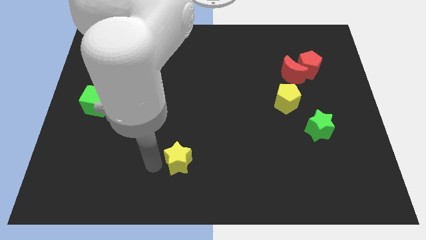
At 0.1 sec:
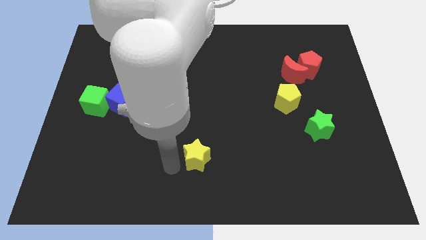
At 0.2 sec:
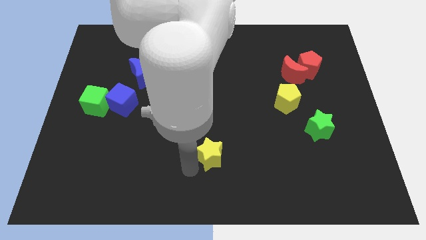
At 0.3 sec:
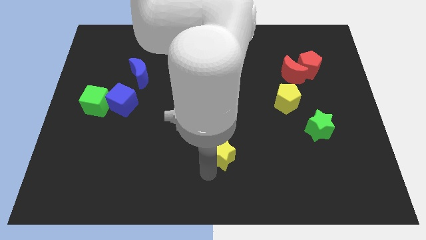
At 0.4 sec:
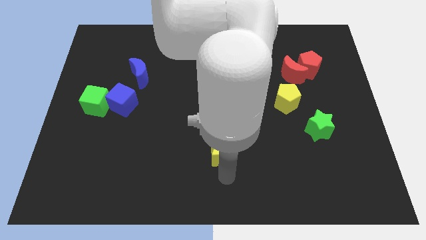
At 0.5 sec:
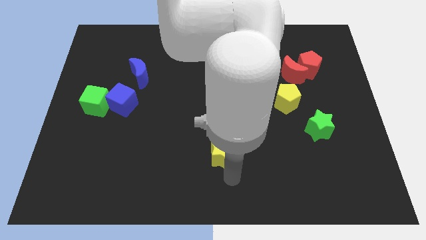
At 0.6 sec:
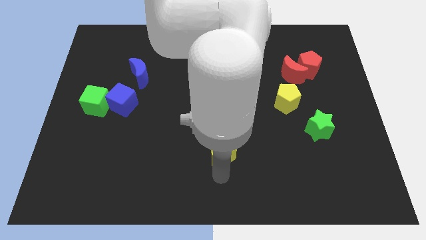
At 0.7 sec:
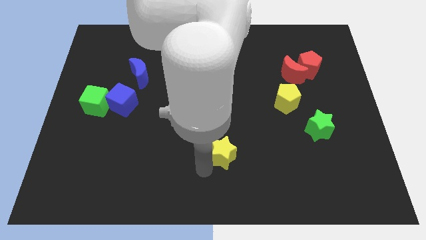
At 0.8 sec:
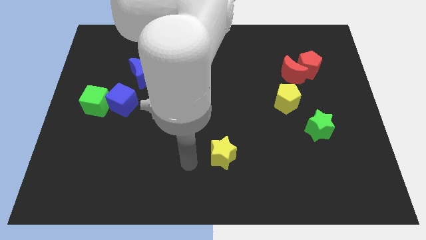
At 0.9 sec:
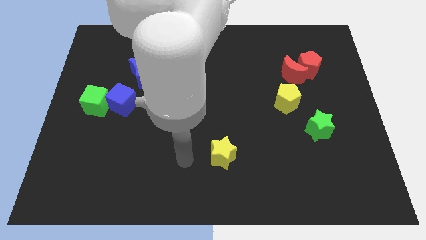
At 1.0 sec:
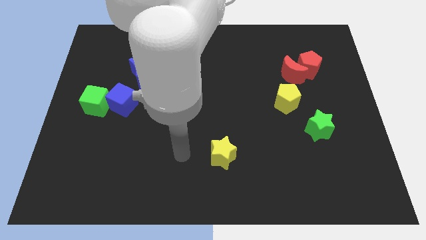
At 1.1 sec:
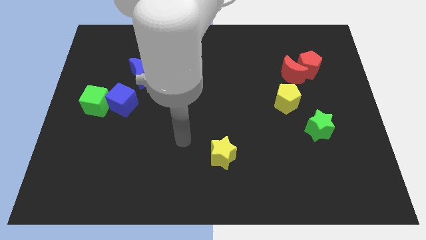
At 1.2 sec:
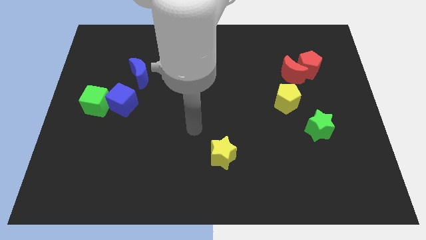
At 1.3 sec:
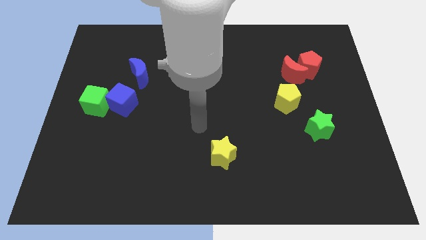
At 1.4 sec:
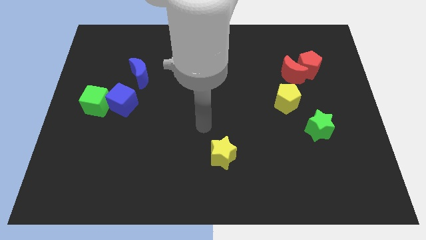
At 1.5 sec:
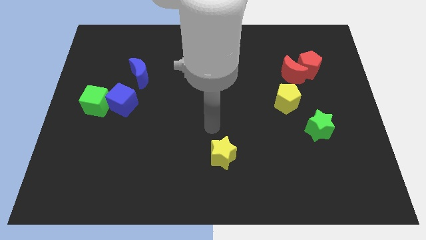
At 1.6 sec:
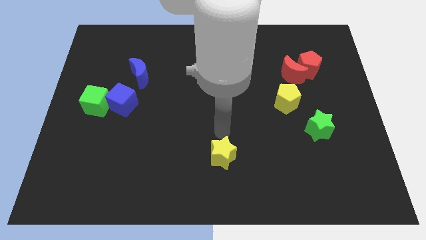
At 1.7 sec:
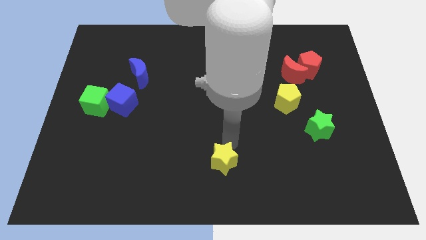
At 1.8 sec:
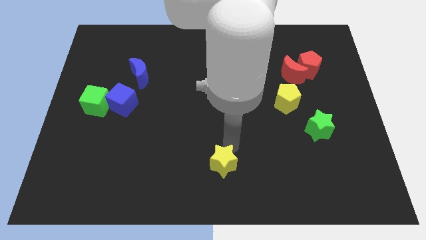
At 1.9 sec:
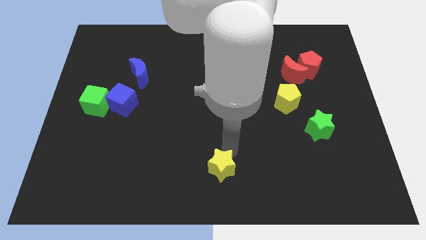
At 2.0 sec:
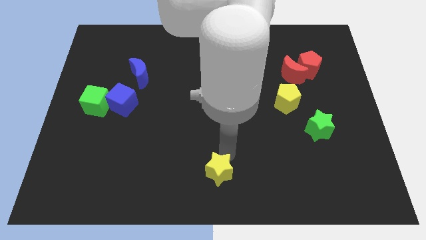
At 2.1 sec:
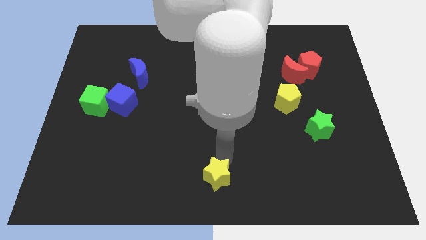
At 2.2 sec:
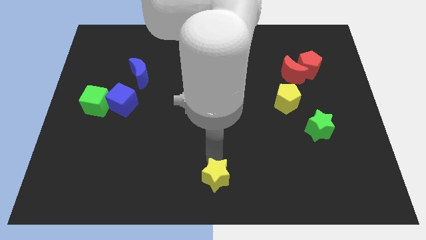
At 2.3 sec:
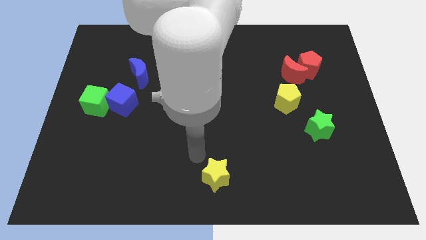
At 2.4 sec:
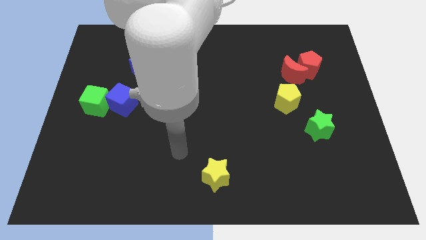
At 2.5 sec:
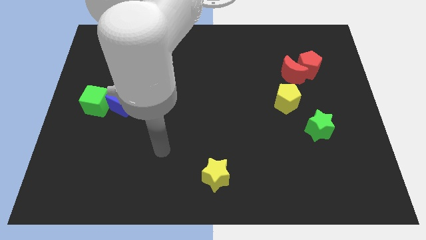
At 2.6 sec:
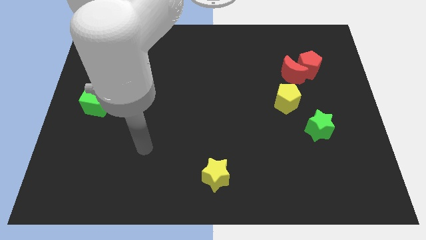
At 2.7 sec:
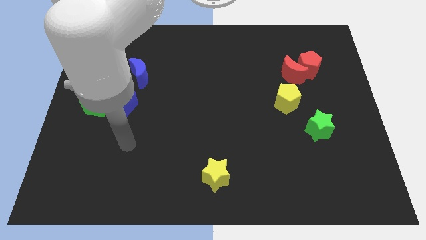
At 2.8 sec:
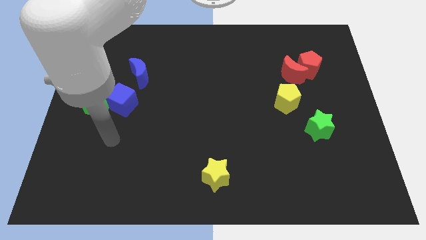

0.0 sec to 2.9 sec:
push the yellow star towards the bottom center of the board

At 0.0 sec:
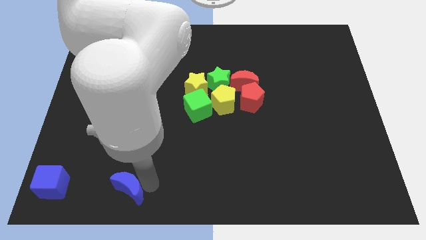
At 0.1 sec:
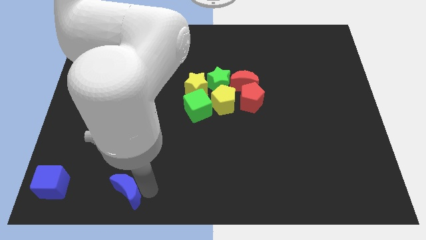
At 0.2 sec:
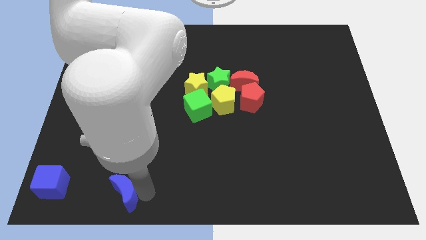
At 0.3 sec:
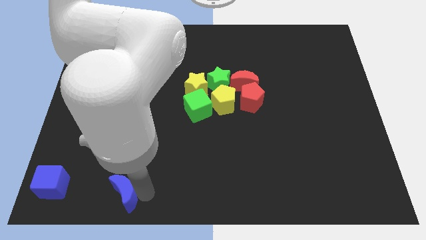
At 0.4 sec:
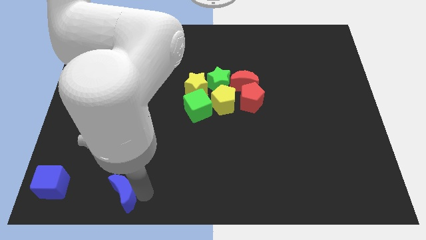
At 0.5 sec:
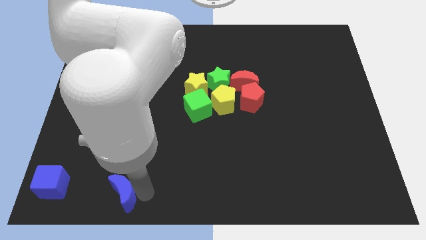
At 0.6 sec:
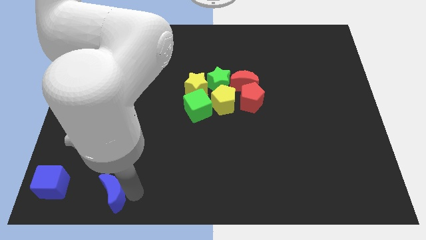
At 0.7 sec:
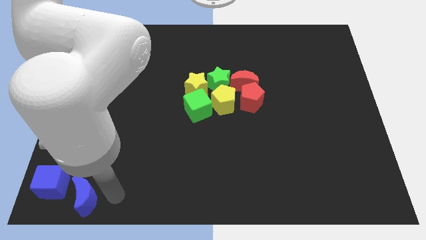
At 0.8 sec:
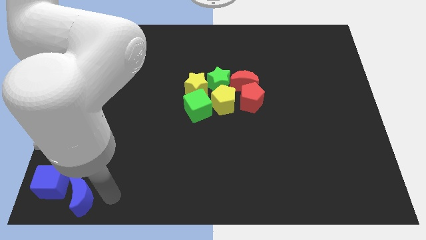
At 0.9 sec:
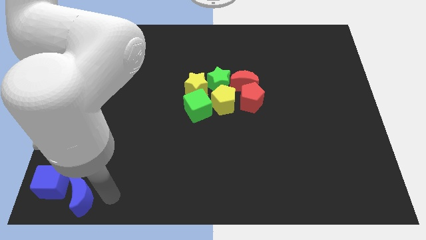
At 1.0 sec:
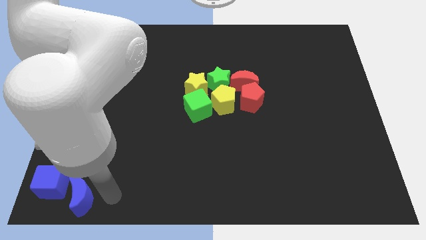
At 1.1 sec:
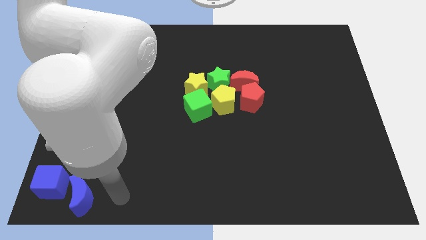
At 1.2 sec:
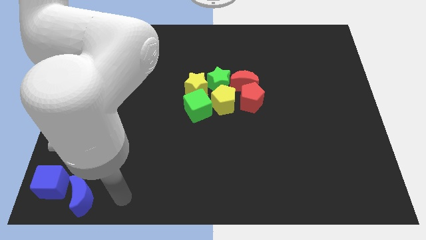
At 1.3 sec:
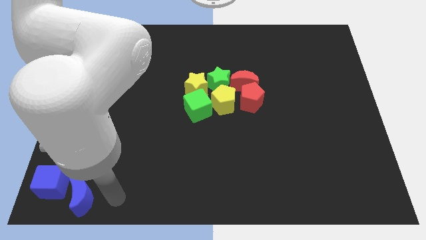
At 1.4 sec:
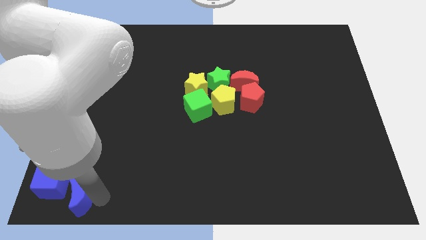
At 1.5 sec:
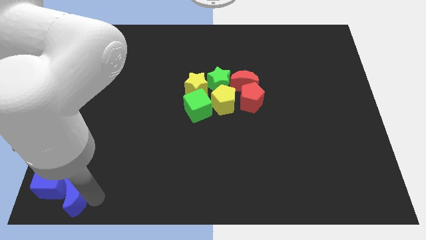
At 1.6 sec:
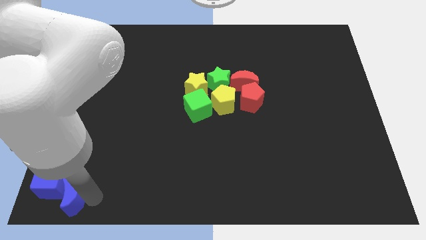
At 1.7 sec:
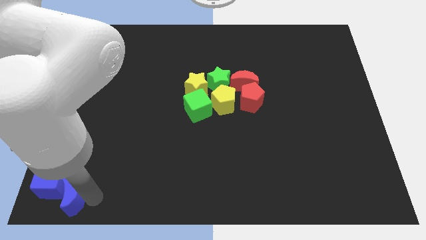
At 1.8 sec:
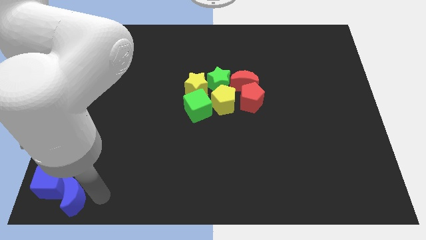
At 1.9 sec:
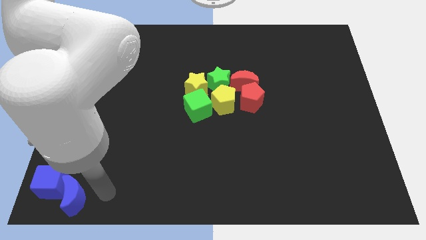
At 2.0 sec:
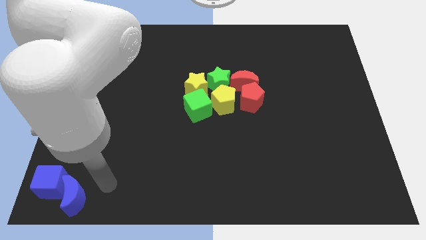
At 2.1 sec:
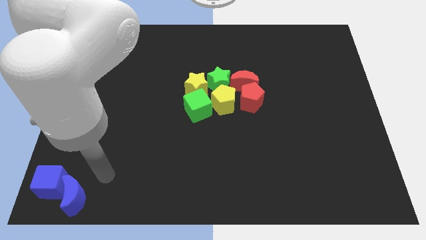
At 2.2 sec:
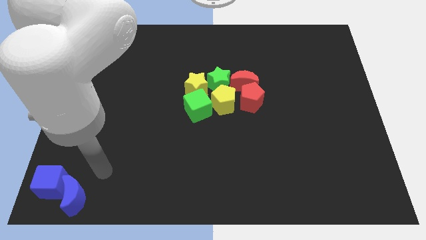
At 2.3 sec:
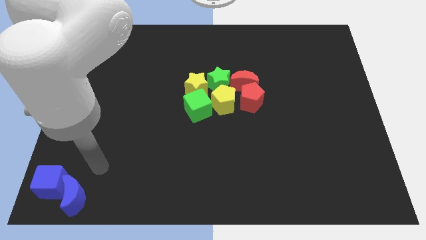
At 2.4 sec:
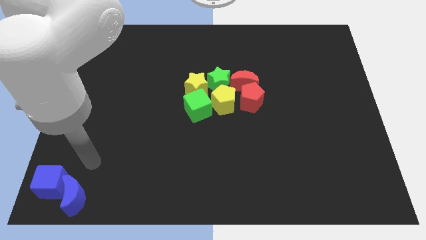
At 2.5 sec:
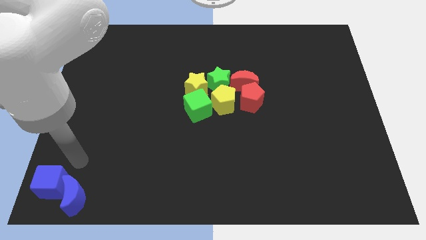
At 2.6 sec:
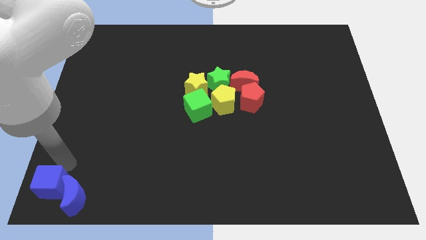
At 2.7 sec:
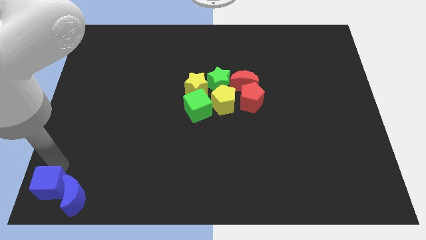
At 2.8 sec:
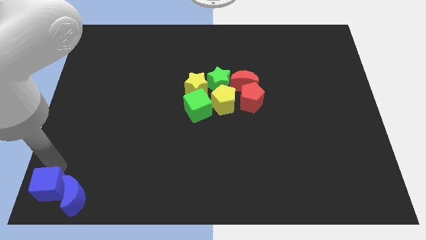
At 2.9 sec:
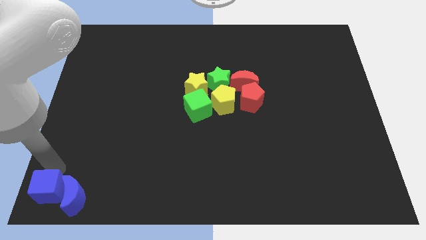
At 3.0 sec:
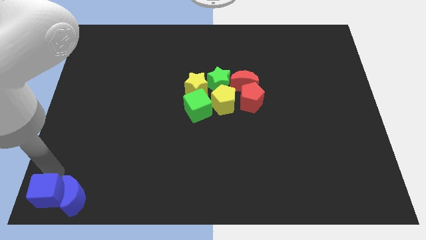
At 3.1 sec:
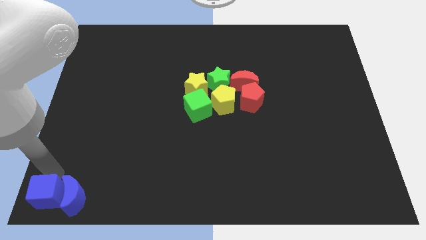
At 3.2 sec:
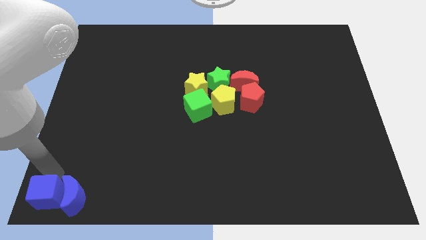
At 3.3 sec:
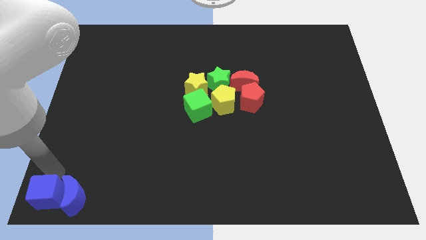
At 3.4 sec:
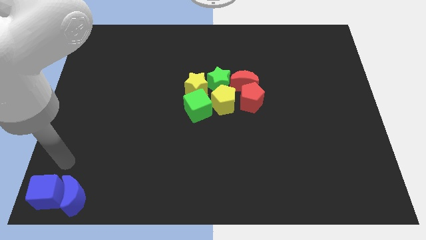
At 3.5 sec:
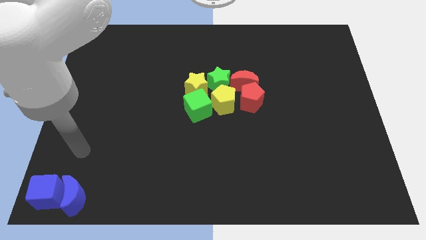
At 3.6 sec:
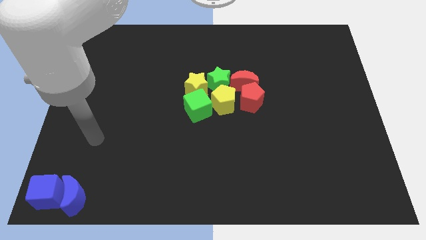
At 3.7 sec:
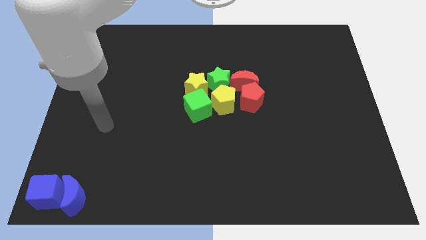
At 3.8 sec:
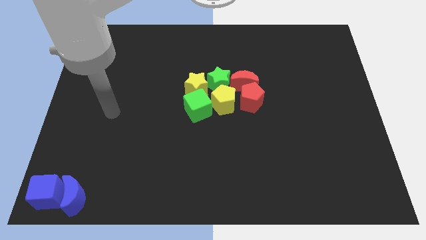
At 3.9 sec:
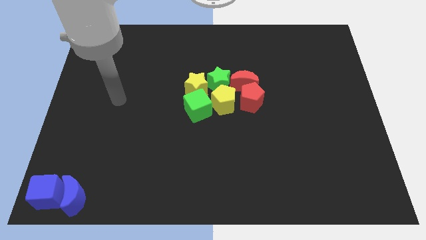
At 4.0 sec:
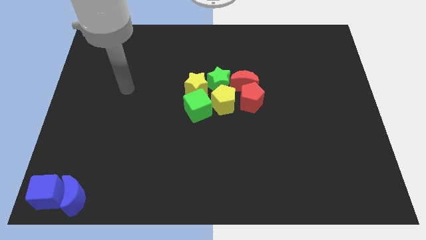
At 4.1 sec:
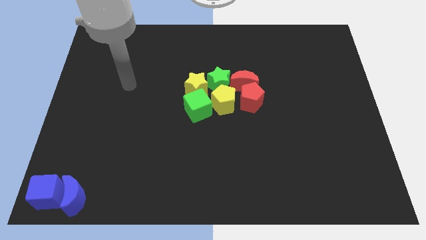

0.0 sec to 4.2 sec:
push the blue blocks to the bottom left corner

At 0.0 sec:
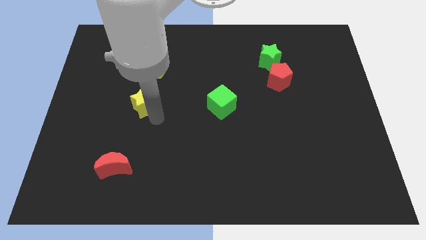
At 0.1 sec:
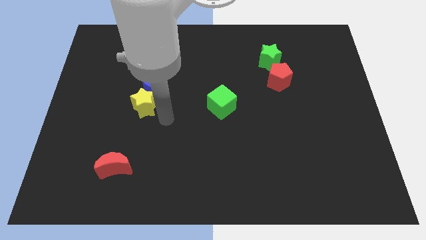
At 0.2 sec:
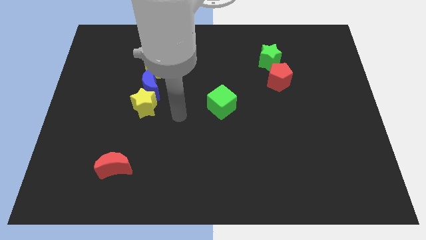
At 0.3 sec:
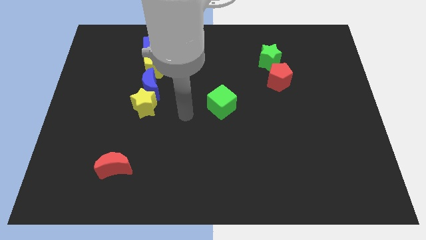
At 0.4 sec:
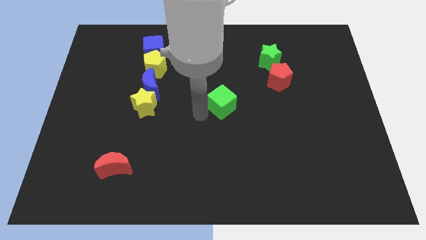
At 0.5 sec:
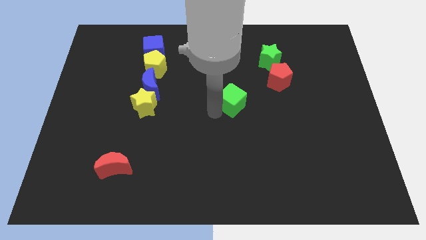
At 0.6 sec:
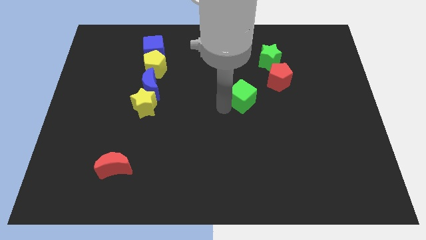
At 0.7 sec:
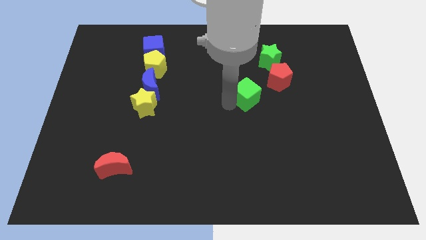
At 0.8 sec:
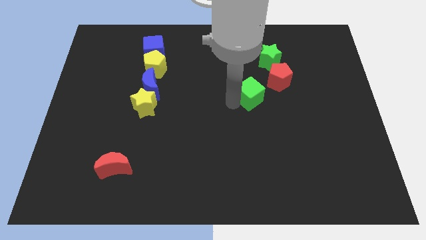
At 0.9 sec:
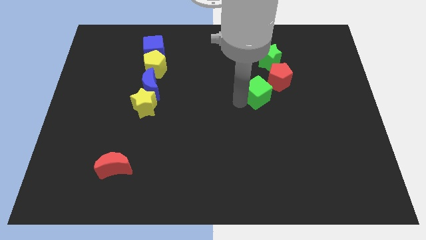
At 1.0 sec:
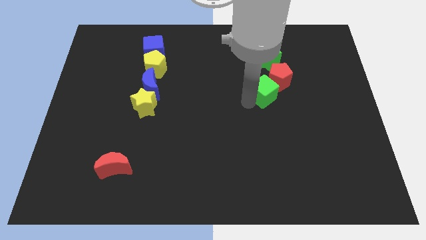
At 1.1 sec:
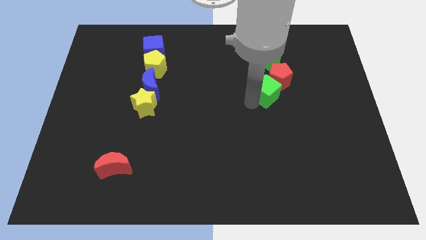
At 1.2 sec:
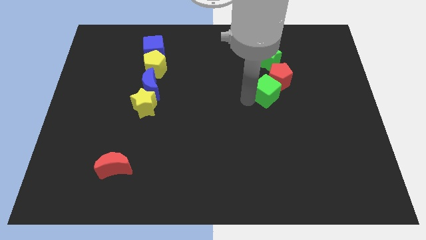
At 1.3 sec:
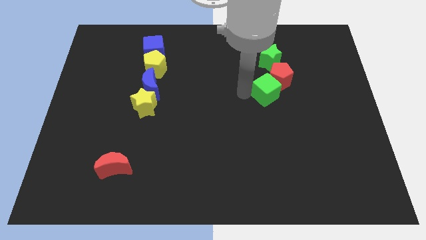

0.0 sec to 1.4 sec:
bring the green cube into the bottom left side of the red pentagon

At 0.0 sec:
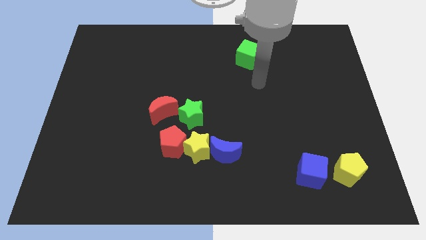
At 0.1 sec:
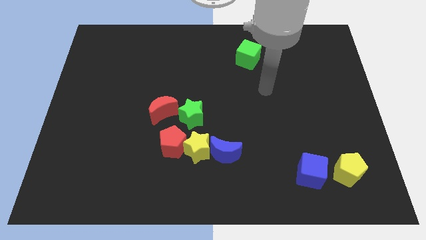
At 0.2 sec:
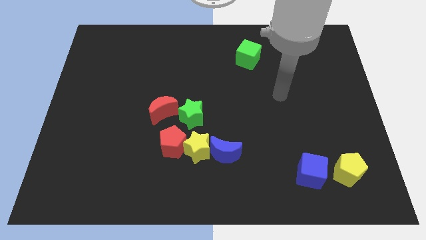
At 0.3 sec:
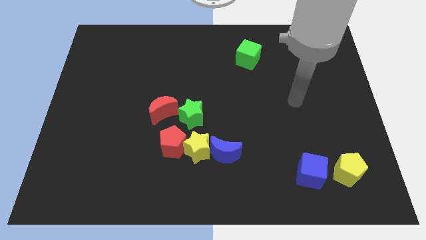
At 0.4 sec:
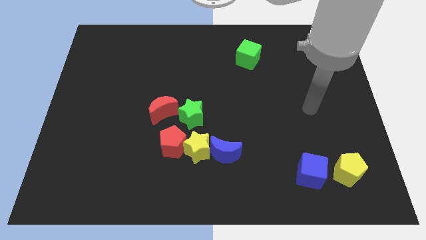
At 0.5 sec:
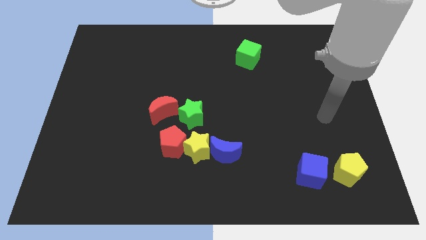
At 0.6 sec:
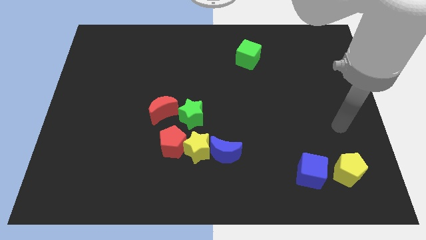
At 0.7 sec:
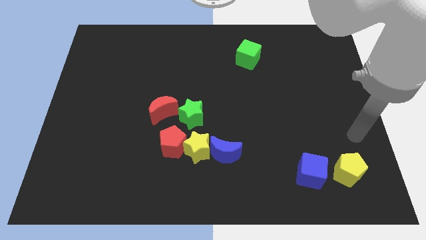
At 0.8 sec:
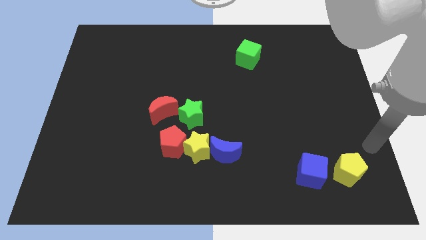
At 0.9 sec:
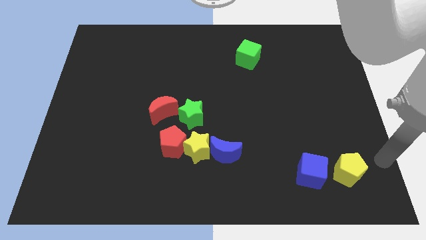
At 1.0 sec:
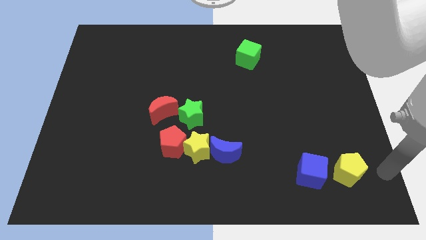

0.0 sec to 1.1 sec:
go and put your hand at the right side of the yellow pentagon
